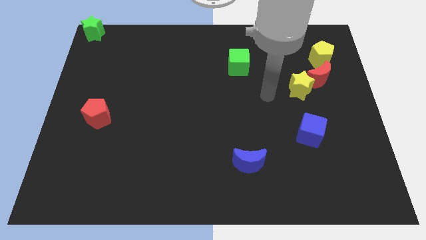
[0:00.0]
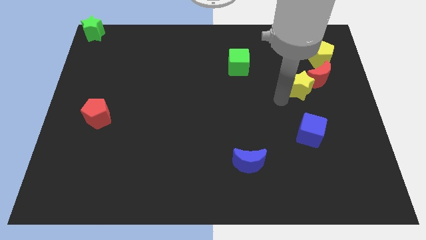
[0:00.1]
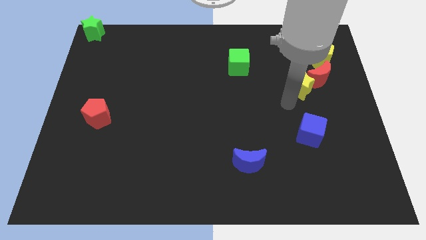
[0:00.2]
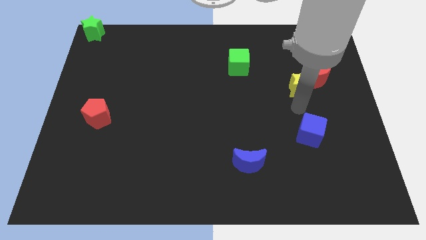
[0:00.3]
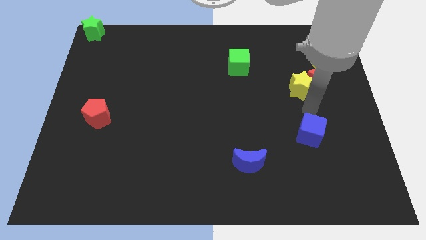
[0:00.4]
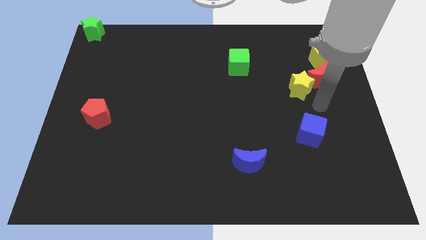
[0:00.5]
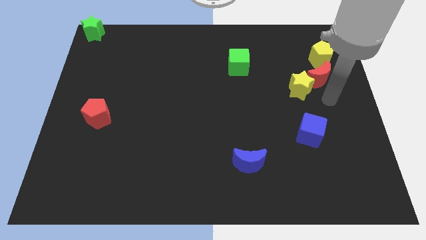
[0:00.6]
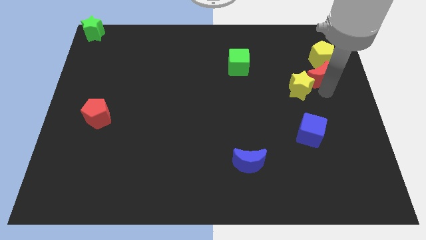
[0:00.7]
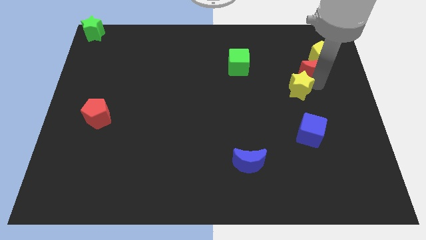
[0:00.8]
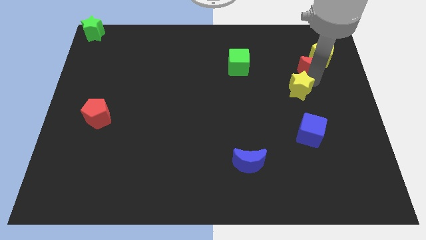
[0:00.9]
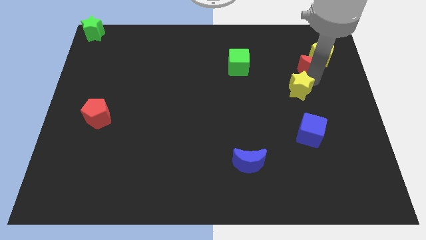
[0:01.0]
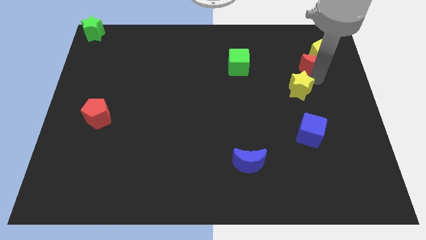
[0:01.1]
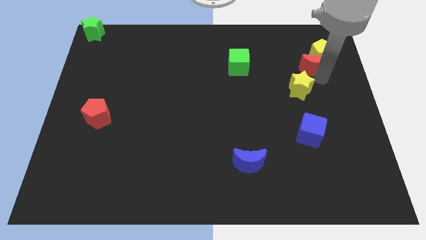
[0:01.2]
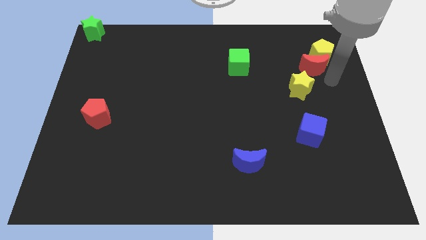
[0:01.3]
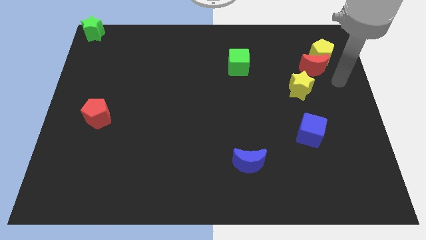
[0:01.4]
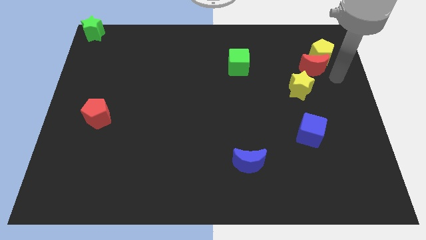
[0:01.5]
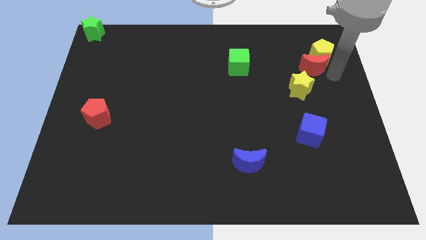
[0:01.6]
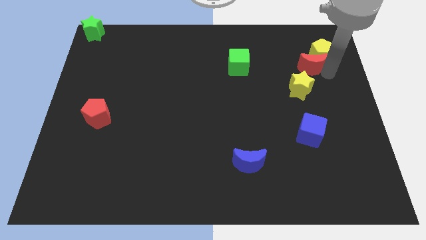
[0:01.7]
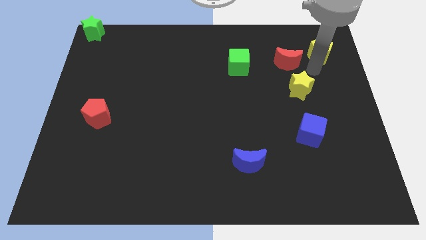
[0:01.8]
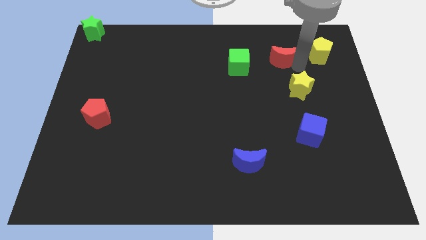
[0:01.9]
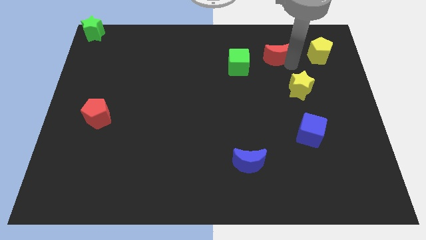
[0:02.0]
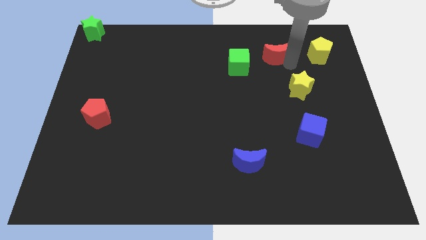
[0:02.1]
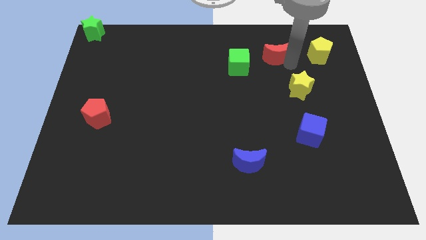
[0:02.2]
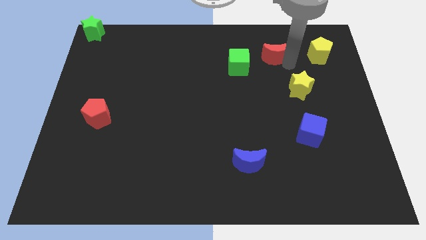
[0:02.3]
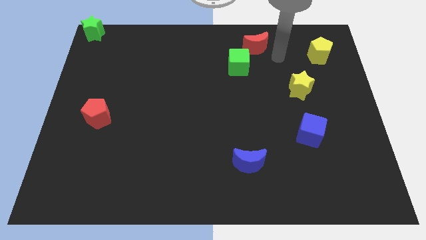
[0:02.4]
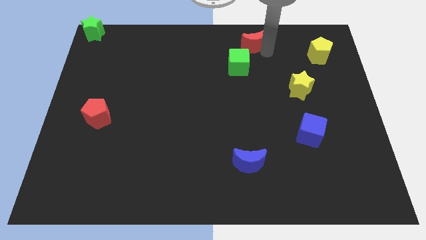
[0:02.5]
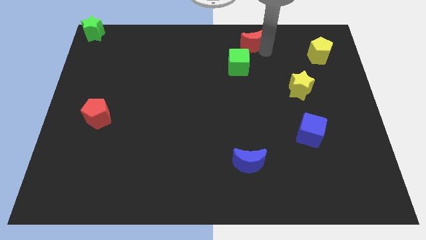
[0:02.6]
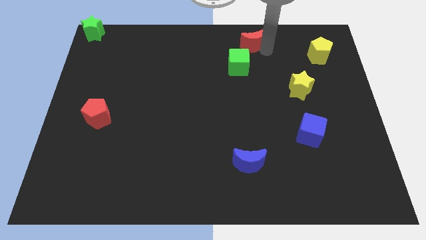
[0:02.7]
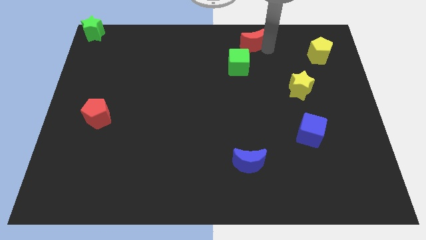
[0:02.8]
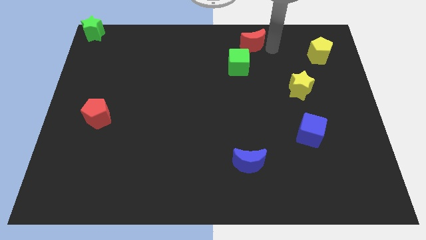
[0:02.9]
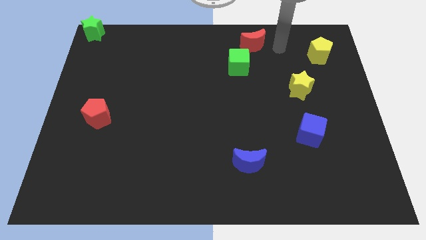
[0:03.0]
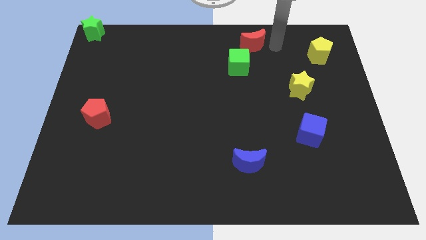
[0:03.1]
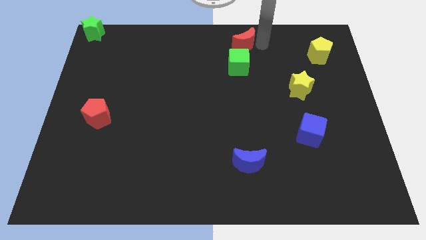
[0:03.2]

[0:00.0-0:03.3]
place the red moon above the green cube

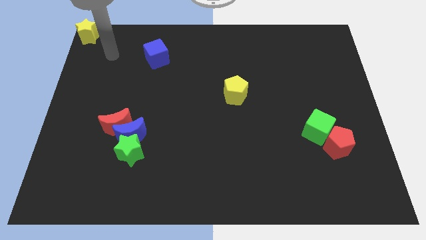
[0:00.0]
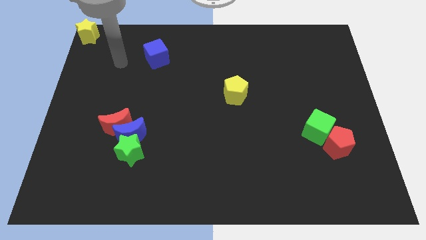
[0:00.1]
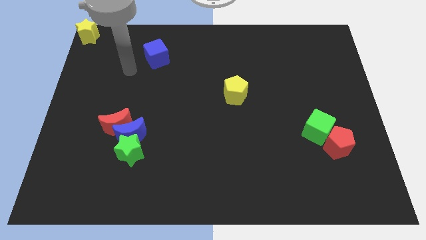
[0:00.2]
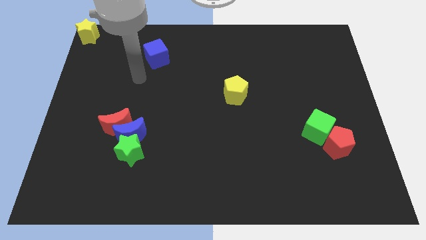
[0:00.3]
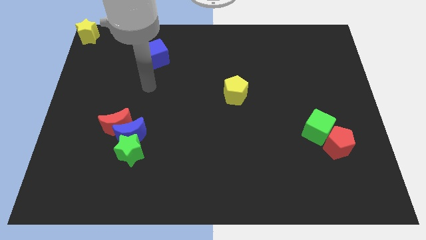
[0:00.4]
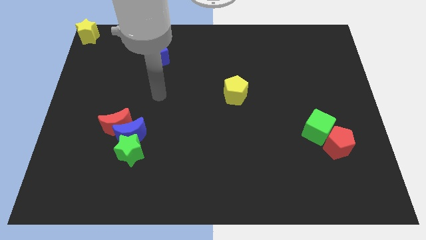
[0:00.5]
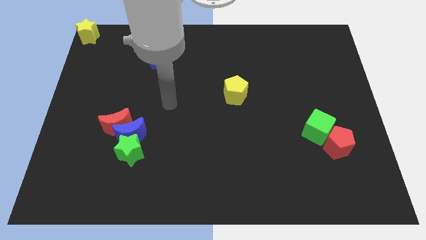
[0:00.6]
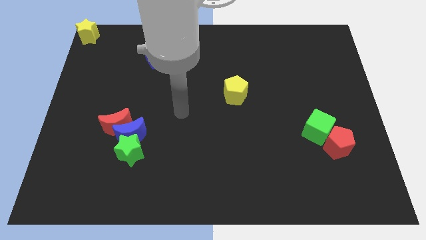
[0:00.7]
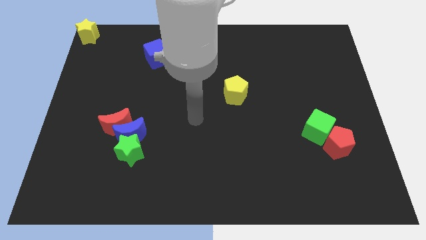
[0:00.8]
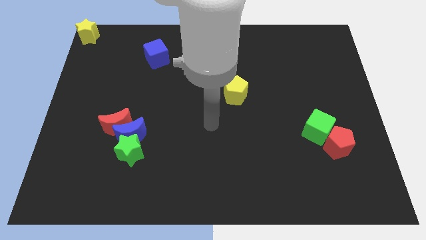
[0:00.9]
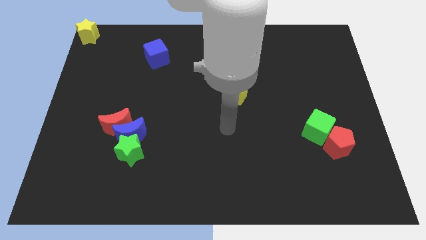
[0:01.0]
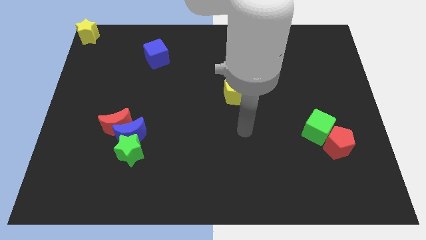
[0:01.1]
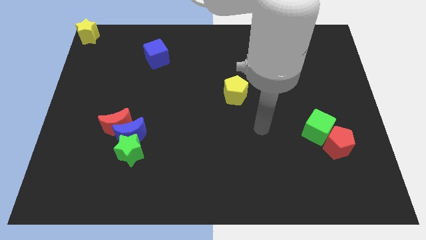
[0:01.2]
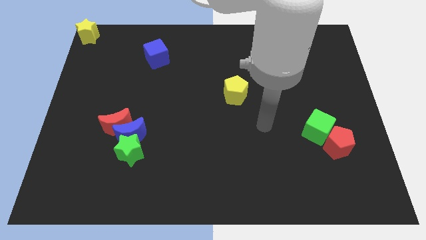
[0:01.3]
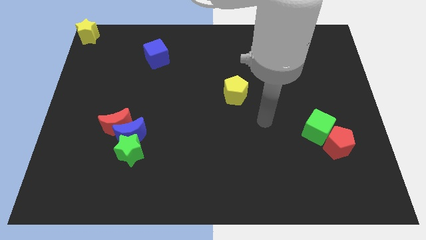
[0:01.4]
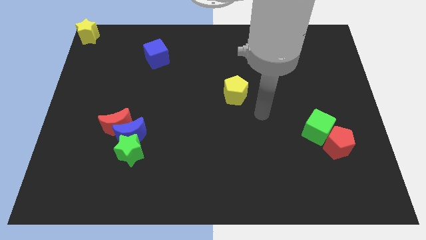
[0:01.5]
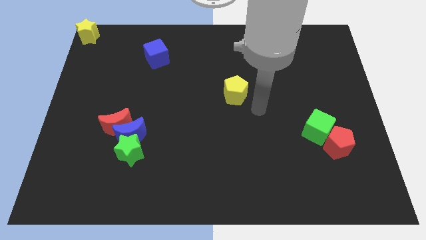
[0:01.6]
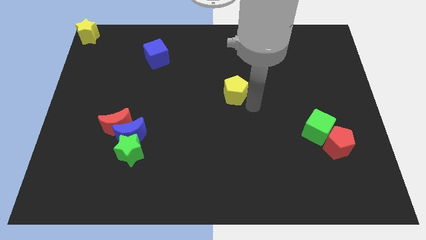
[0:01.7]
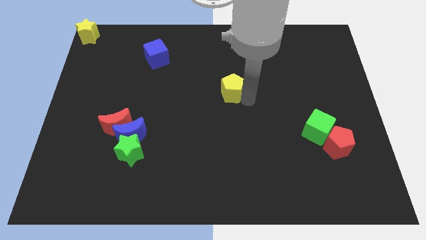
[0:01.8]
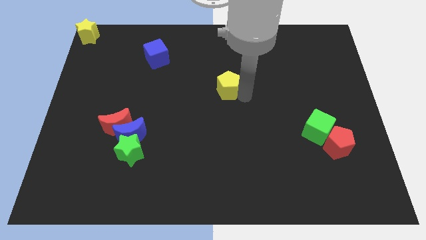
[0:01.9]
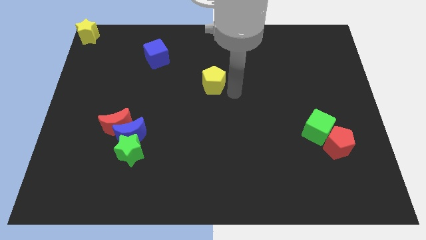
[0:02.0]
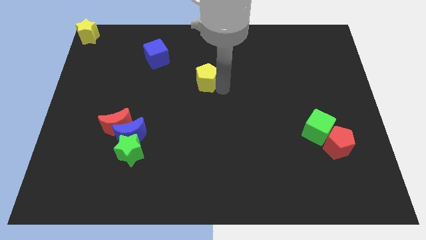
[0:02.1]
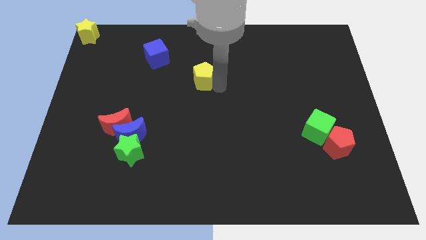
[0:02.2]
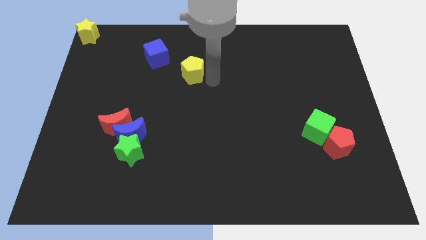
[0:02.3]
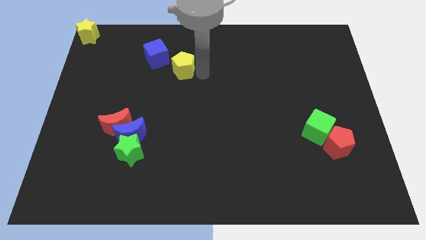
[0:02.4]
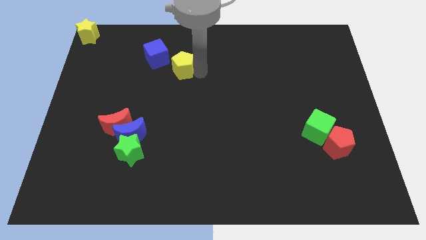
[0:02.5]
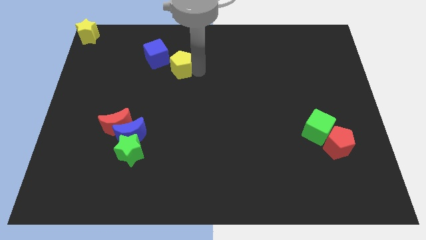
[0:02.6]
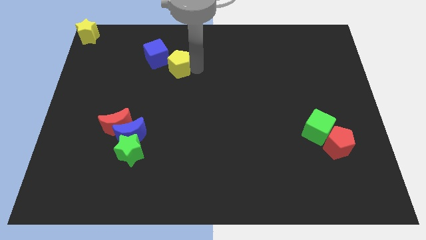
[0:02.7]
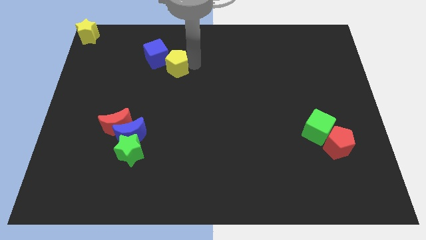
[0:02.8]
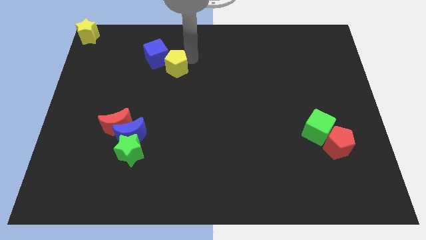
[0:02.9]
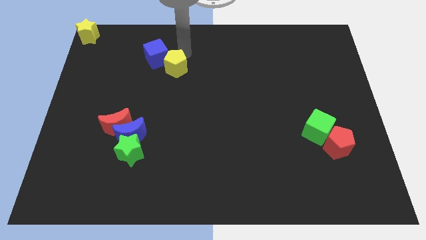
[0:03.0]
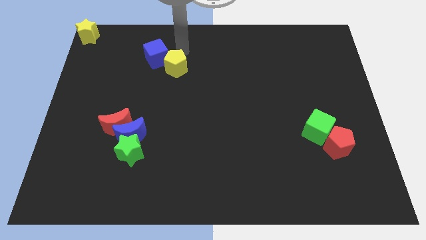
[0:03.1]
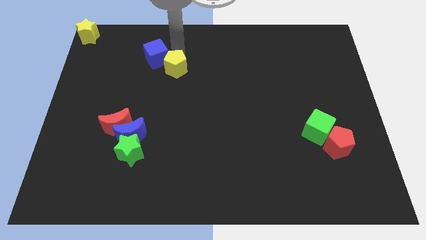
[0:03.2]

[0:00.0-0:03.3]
place yellow pentagon into the blue cube

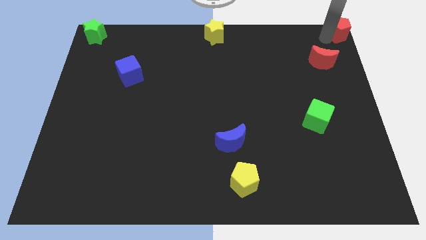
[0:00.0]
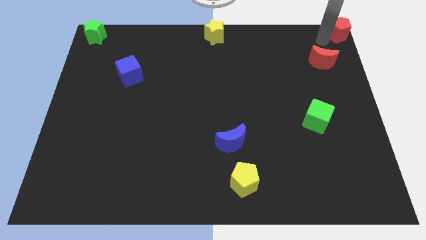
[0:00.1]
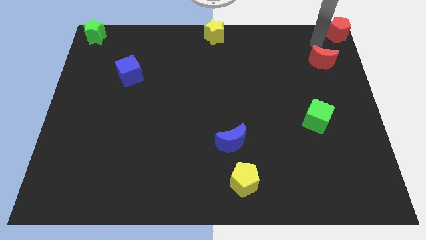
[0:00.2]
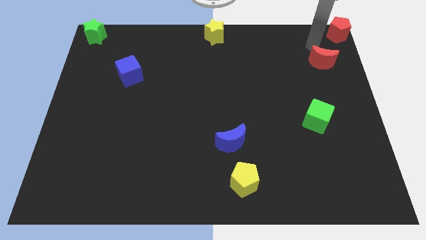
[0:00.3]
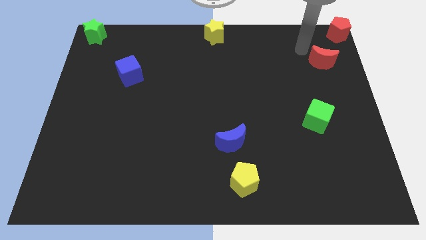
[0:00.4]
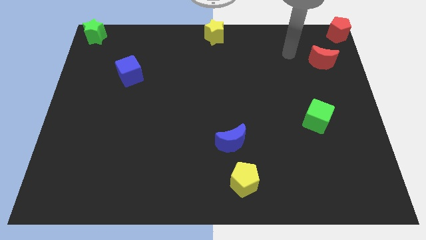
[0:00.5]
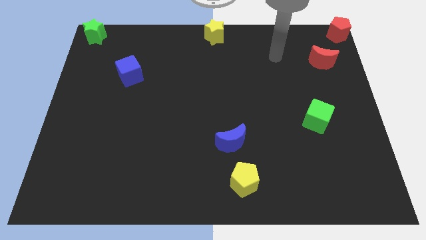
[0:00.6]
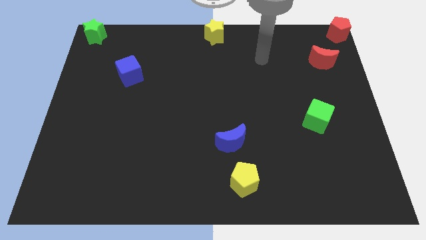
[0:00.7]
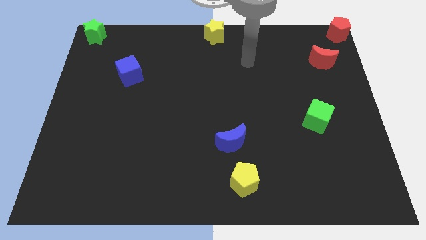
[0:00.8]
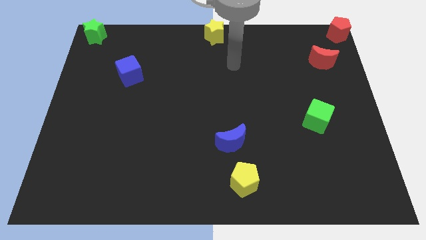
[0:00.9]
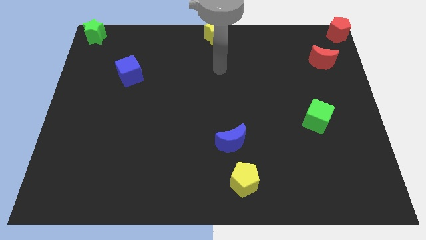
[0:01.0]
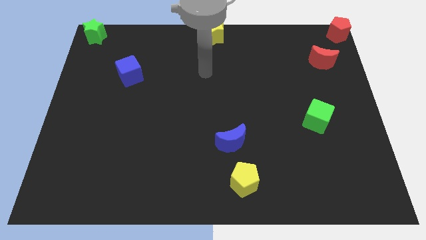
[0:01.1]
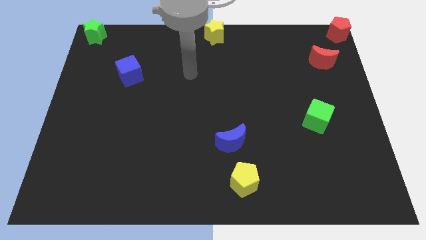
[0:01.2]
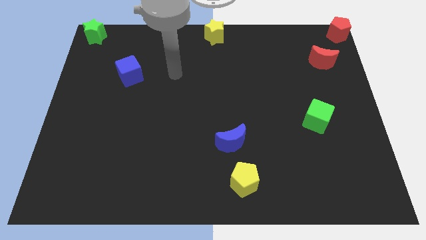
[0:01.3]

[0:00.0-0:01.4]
move yourself away from the left side of the red pentagon

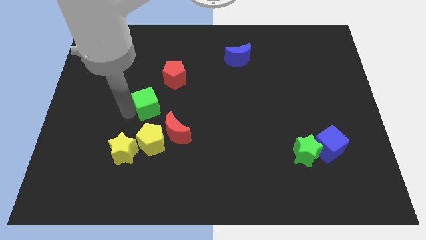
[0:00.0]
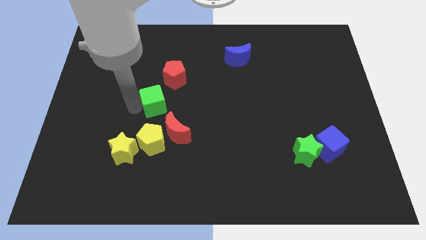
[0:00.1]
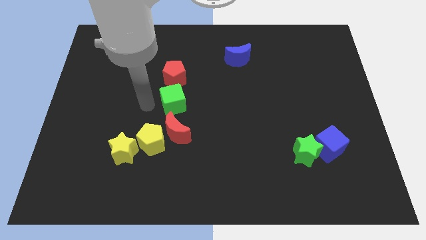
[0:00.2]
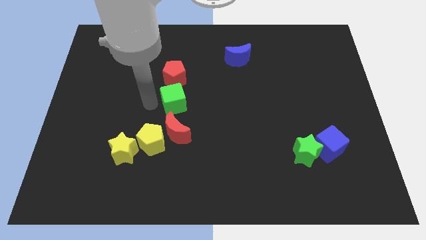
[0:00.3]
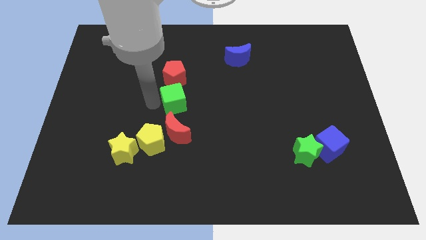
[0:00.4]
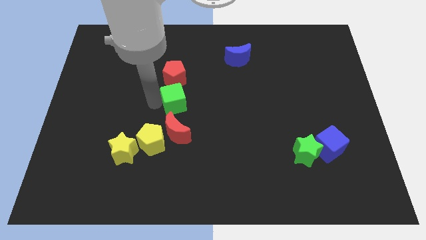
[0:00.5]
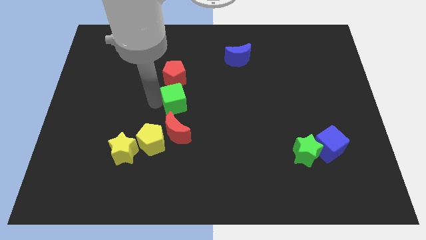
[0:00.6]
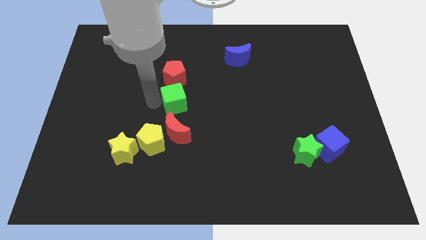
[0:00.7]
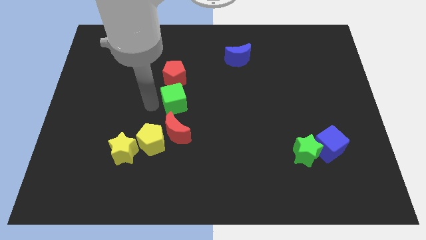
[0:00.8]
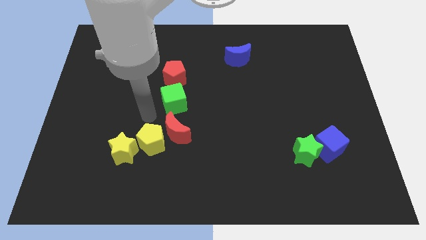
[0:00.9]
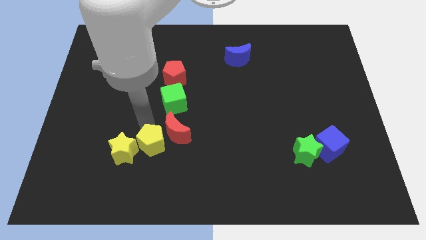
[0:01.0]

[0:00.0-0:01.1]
place green cube below red pentagon
